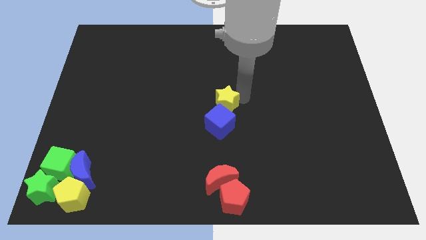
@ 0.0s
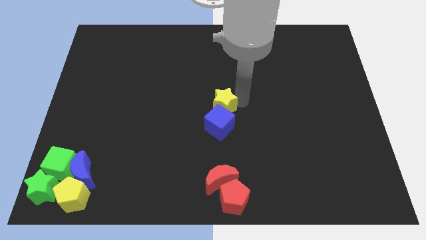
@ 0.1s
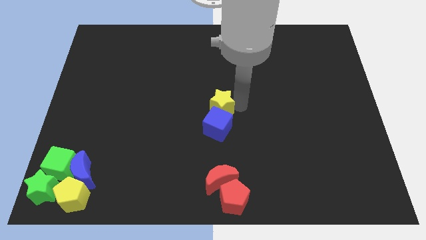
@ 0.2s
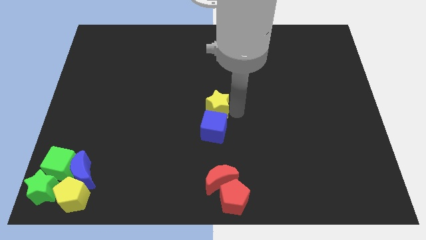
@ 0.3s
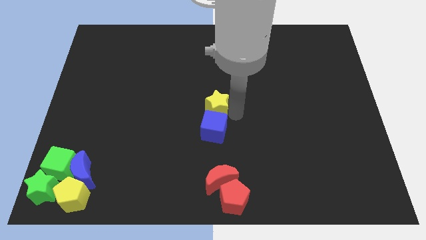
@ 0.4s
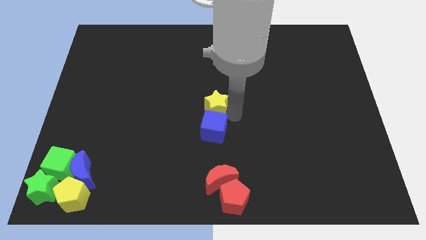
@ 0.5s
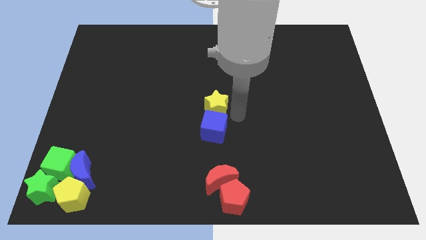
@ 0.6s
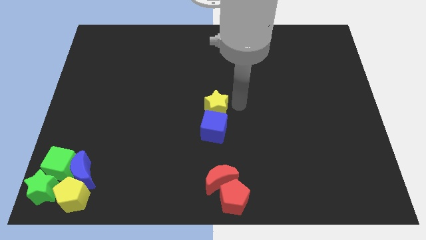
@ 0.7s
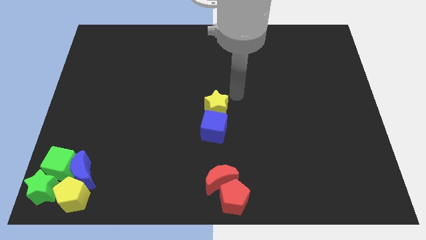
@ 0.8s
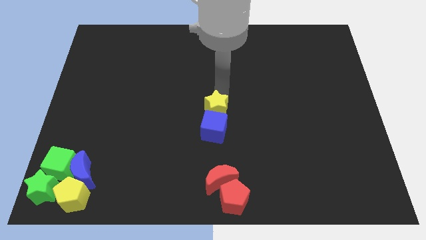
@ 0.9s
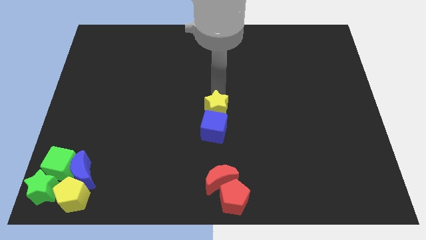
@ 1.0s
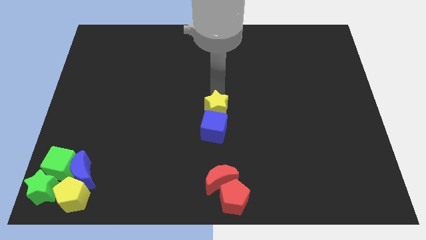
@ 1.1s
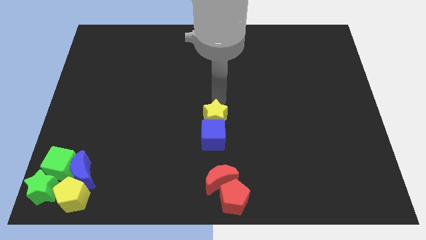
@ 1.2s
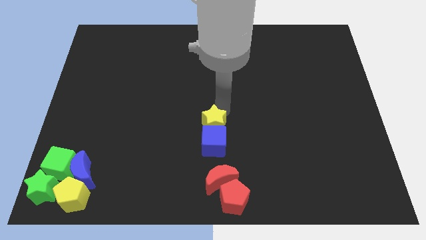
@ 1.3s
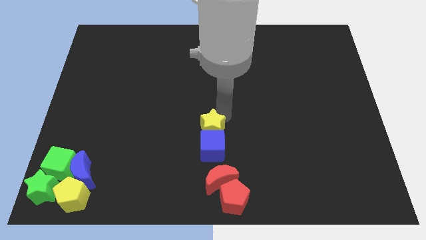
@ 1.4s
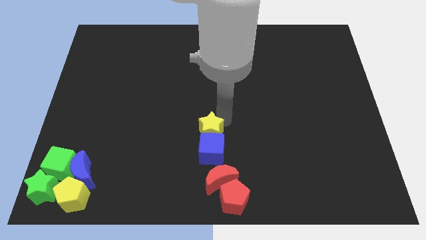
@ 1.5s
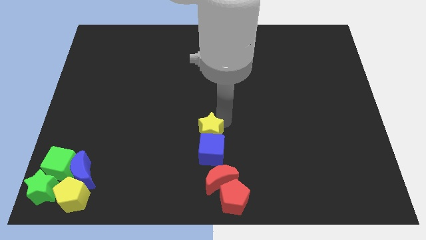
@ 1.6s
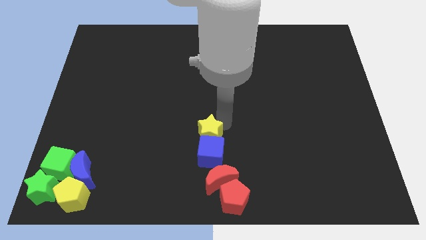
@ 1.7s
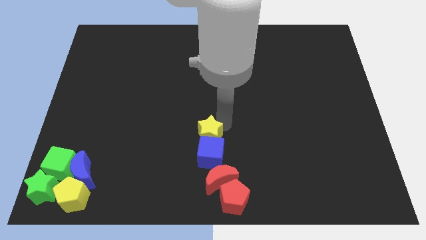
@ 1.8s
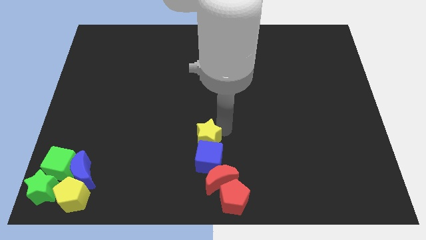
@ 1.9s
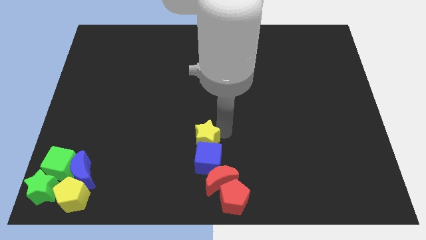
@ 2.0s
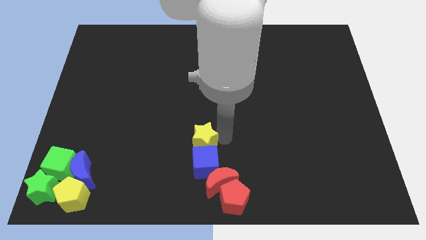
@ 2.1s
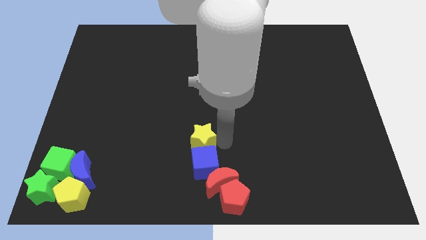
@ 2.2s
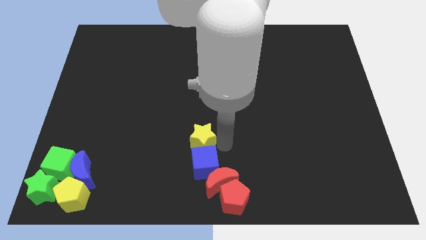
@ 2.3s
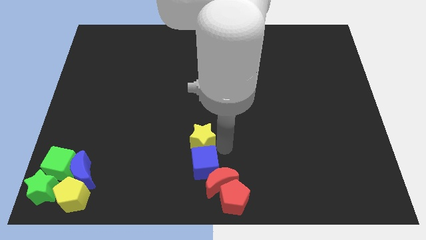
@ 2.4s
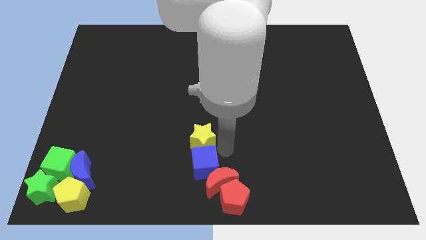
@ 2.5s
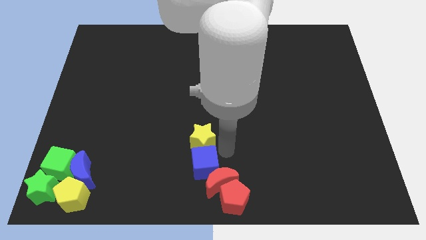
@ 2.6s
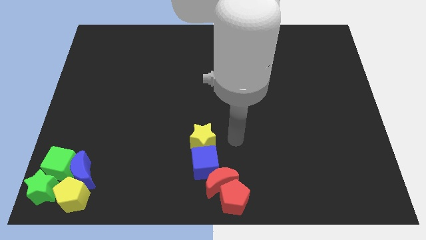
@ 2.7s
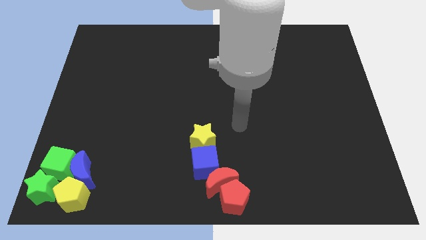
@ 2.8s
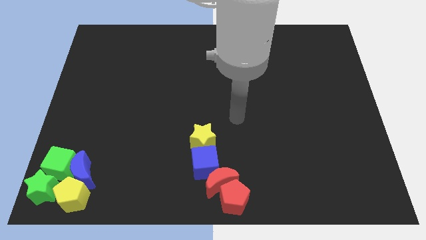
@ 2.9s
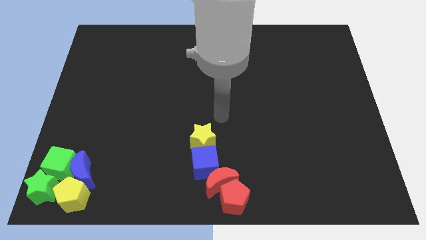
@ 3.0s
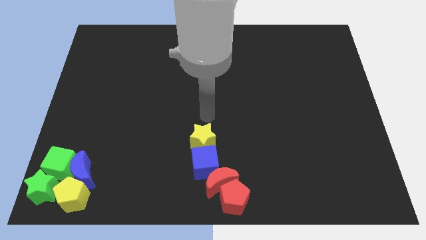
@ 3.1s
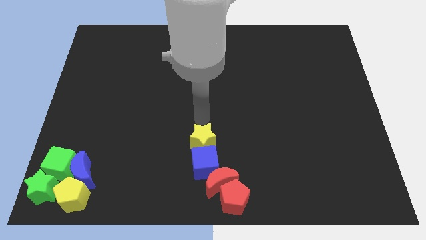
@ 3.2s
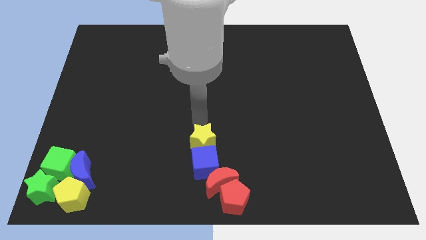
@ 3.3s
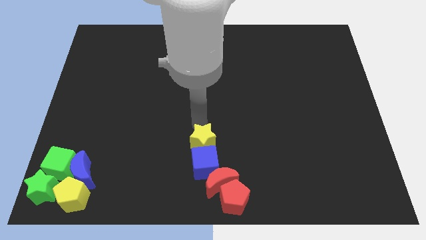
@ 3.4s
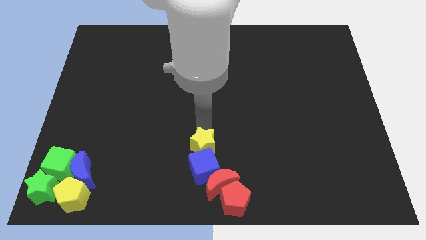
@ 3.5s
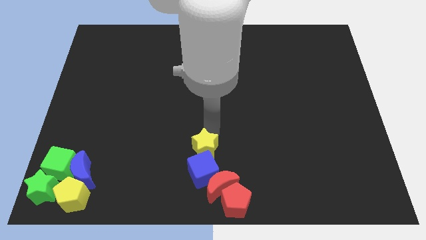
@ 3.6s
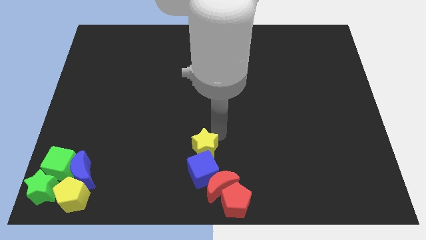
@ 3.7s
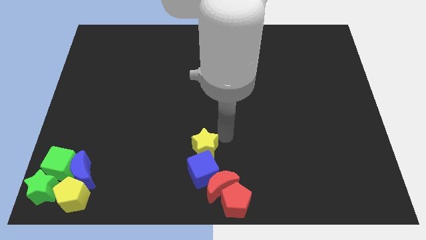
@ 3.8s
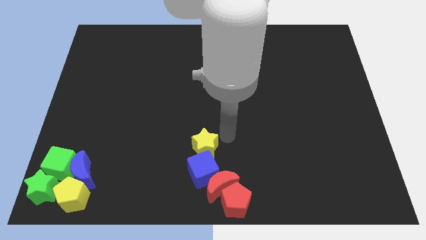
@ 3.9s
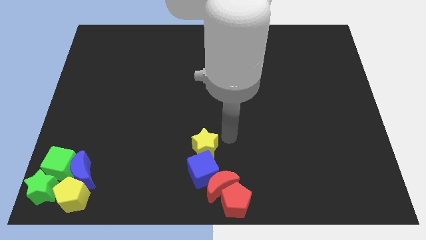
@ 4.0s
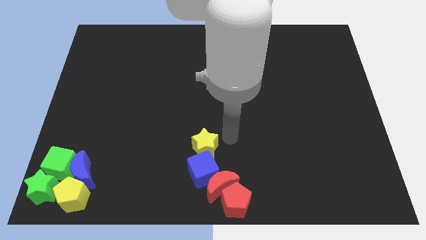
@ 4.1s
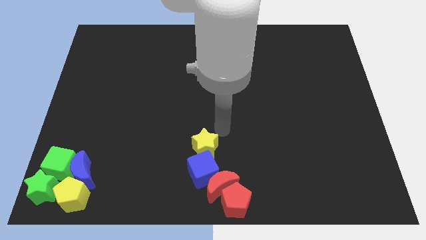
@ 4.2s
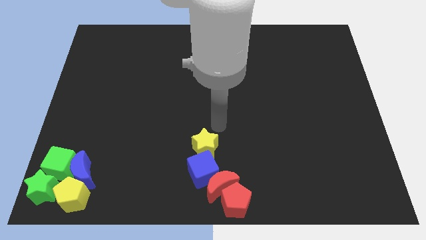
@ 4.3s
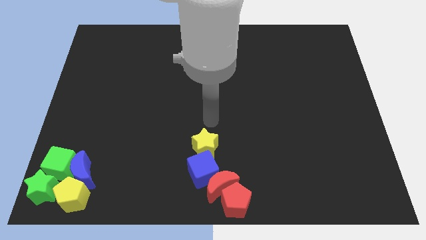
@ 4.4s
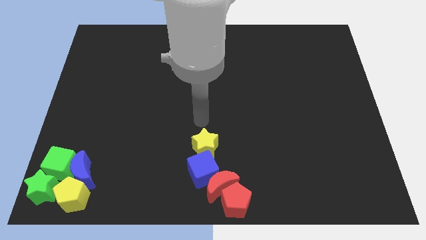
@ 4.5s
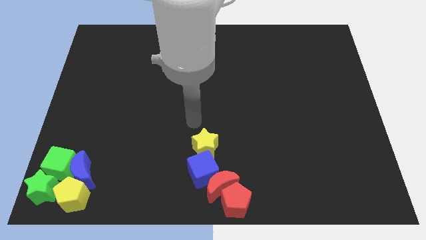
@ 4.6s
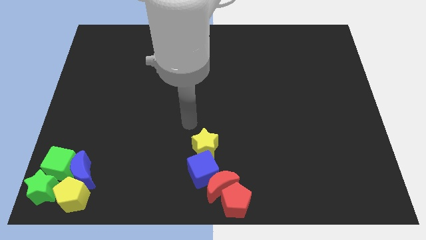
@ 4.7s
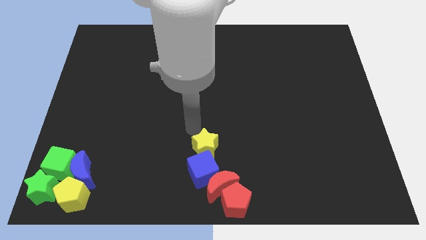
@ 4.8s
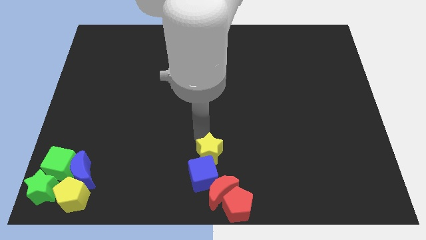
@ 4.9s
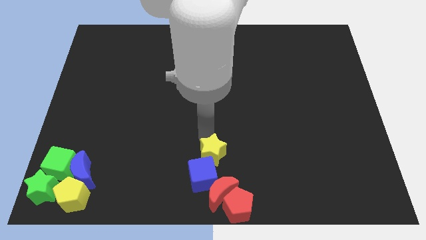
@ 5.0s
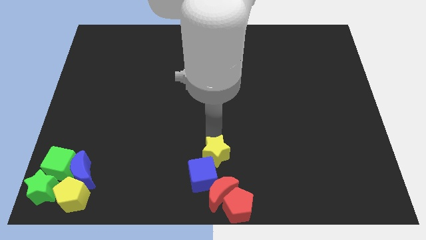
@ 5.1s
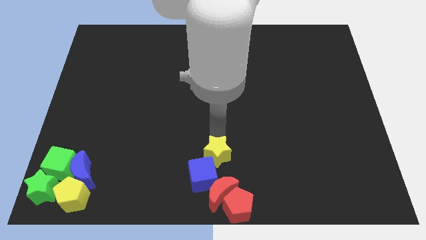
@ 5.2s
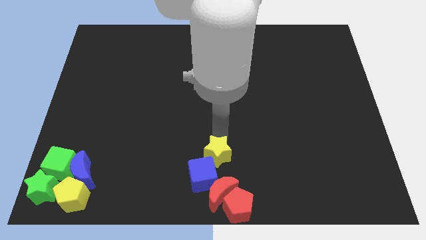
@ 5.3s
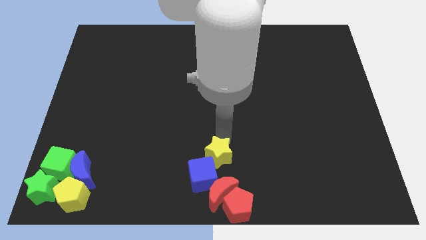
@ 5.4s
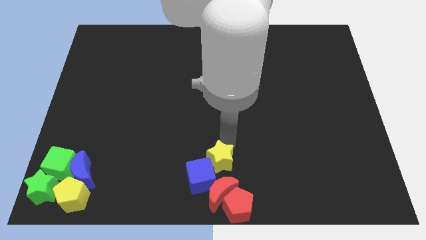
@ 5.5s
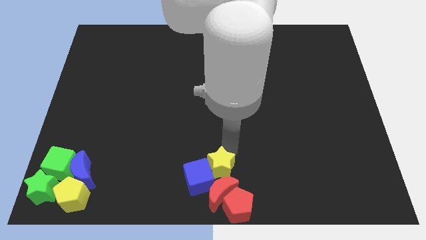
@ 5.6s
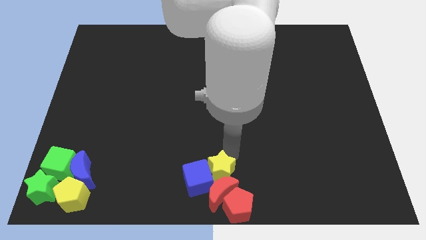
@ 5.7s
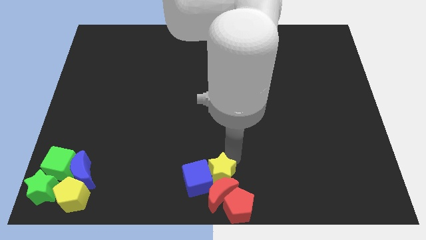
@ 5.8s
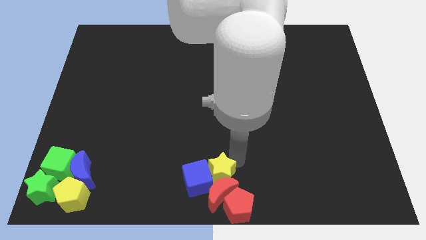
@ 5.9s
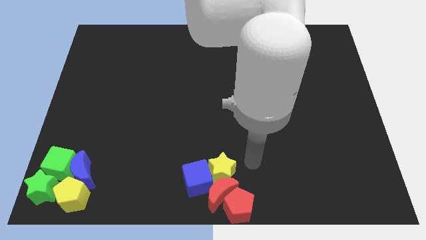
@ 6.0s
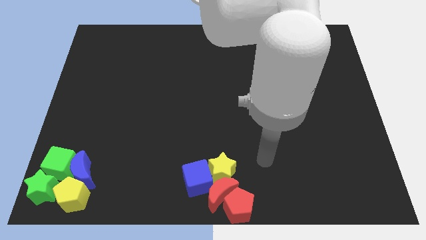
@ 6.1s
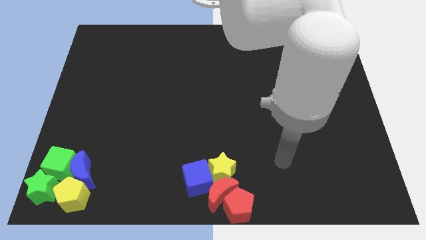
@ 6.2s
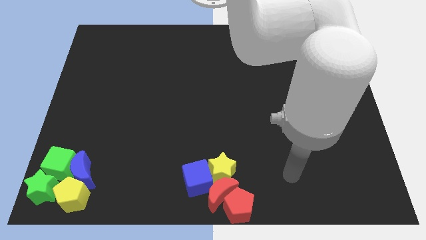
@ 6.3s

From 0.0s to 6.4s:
push the yellow star along with blue cube into the red crescent

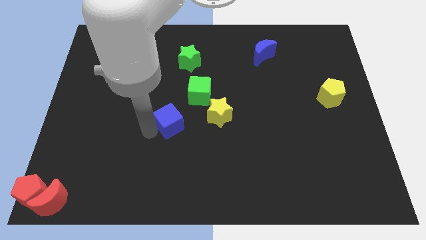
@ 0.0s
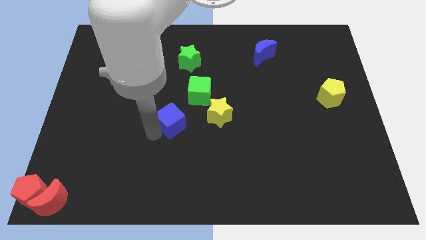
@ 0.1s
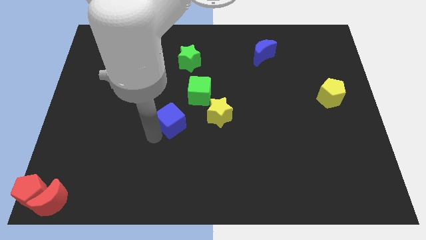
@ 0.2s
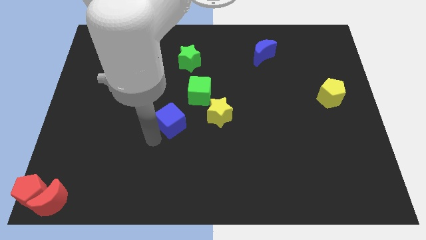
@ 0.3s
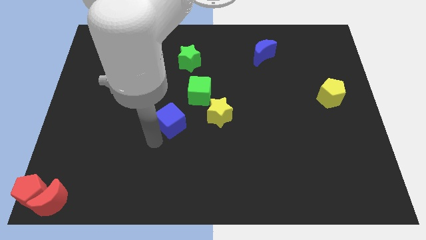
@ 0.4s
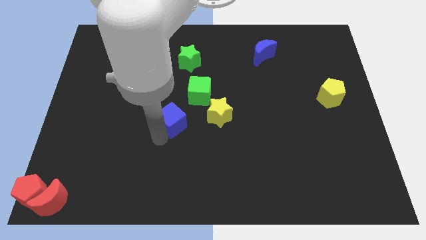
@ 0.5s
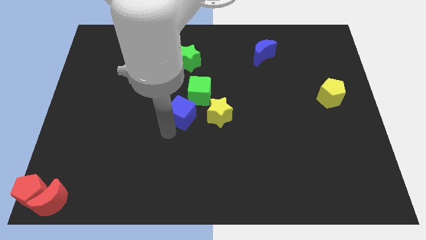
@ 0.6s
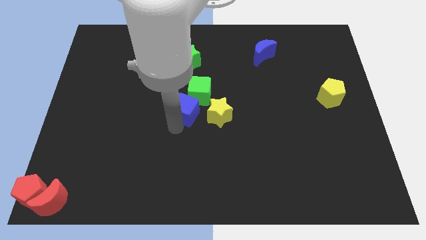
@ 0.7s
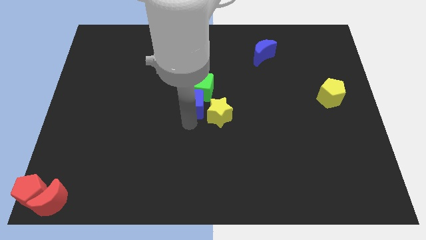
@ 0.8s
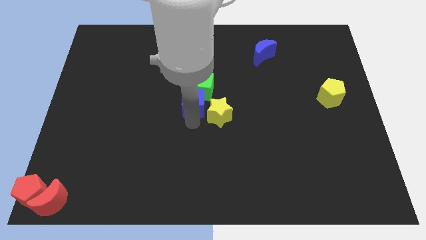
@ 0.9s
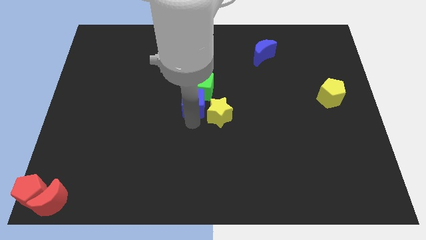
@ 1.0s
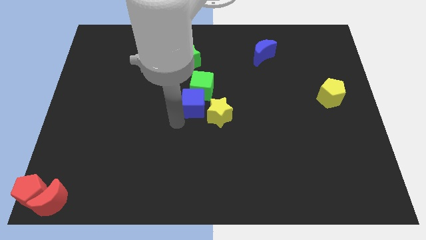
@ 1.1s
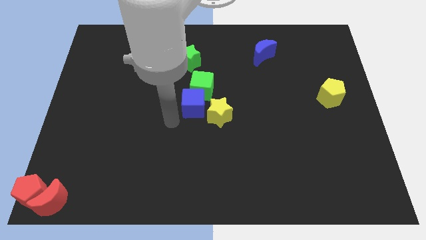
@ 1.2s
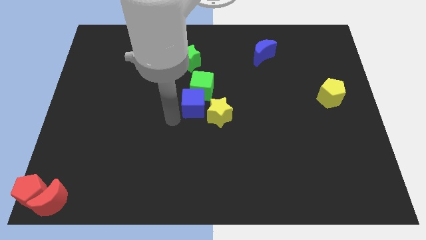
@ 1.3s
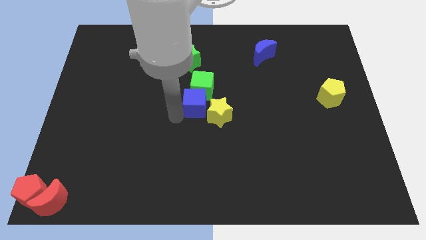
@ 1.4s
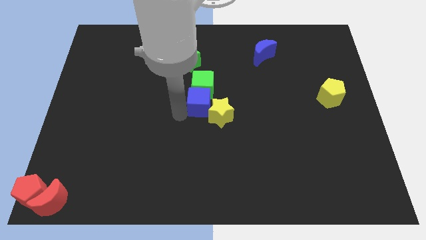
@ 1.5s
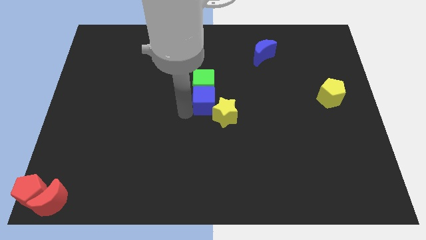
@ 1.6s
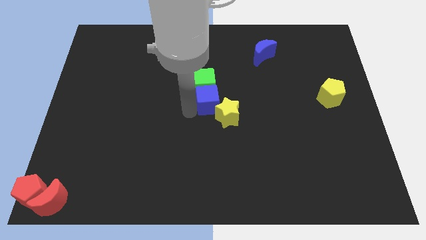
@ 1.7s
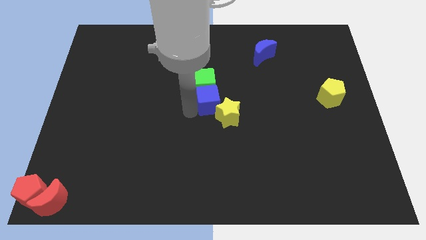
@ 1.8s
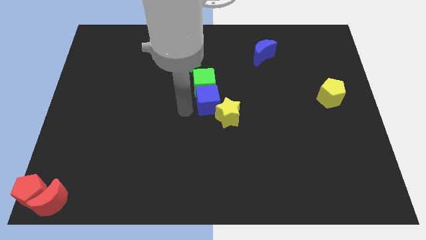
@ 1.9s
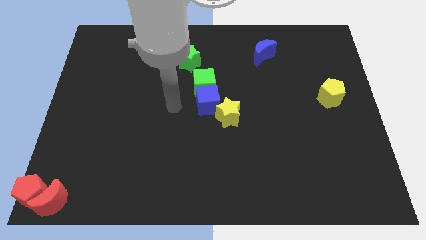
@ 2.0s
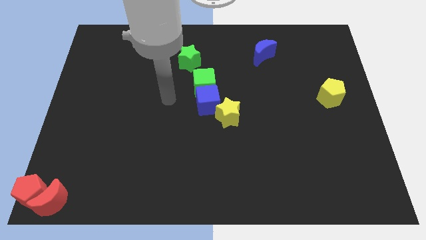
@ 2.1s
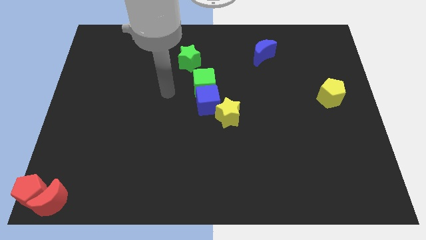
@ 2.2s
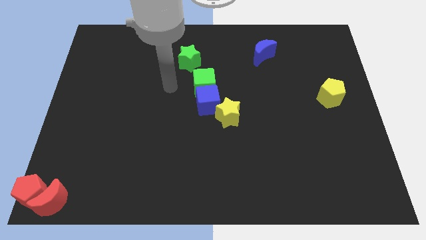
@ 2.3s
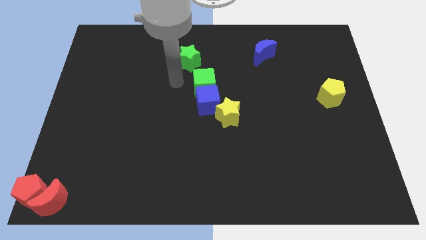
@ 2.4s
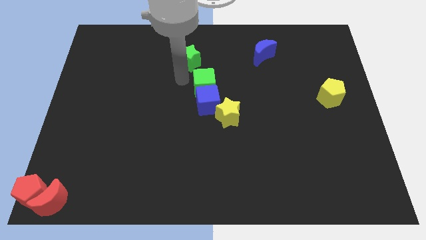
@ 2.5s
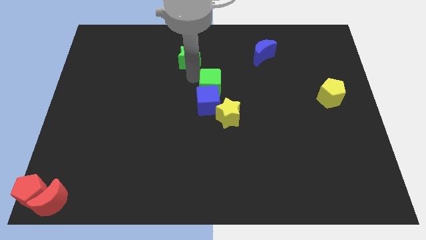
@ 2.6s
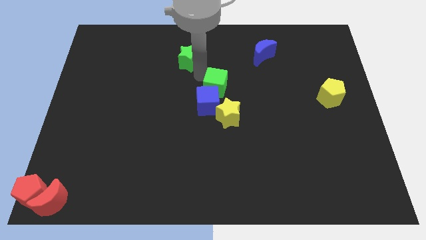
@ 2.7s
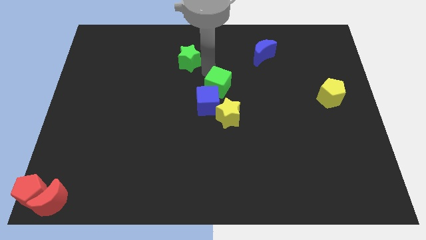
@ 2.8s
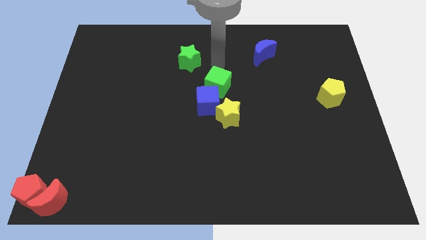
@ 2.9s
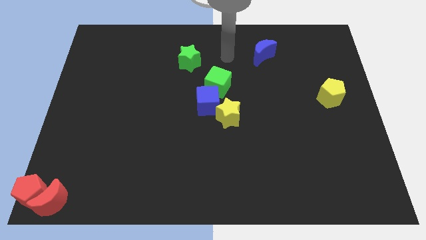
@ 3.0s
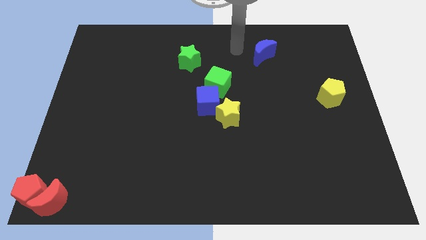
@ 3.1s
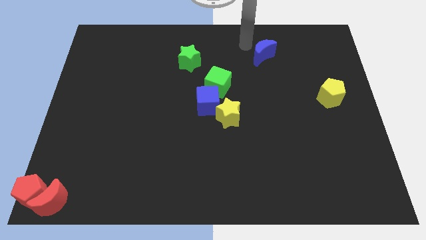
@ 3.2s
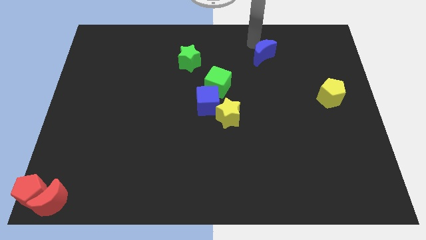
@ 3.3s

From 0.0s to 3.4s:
move the blue cube into the green cube
